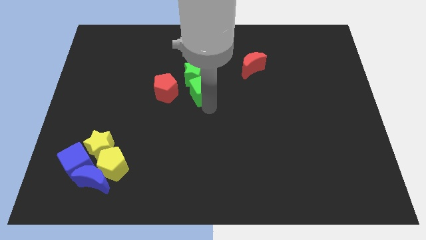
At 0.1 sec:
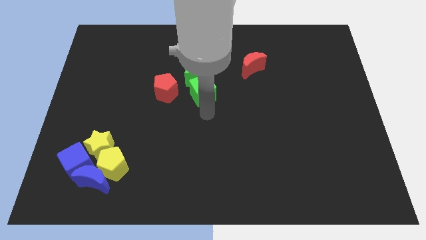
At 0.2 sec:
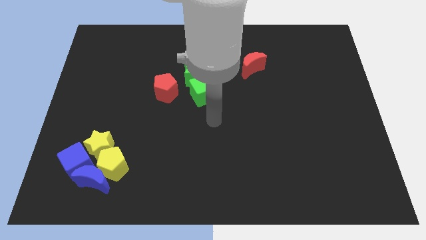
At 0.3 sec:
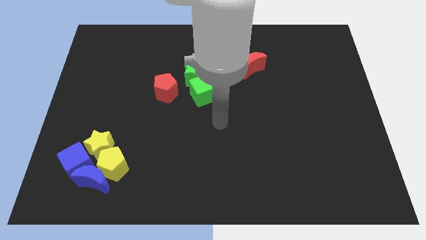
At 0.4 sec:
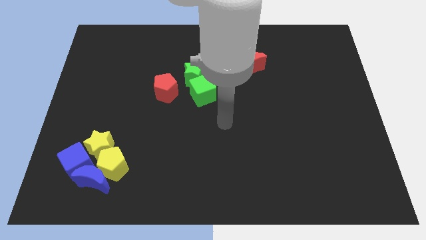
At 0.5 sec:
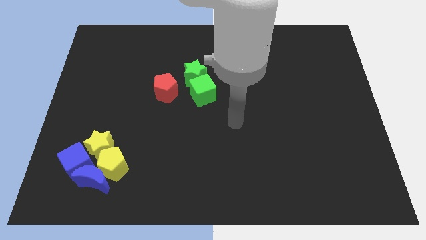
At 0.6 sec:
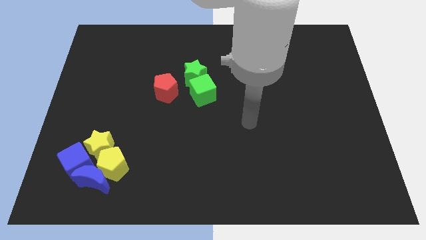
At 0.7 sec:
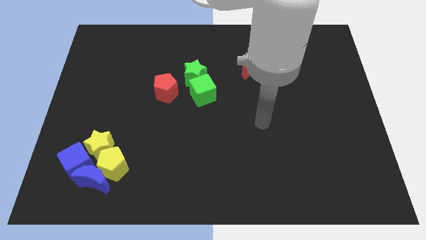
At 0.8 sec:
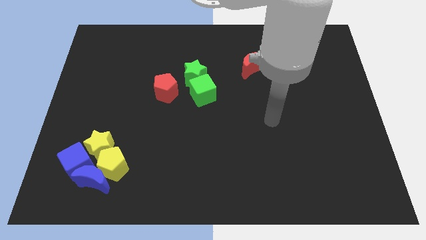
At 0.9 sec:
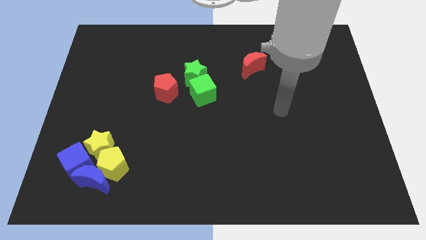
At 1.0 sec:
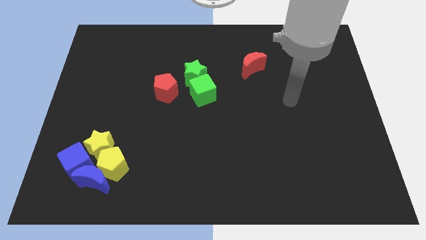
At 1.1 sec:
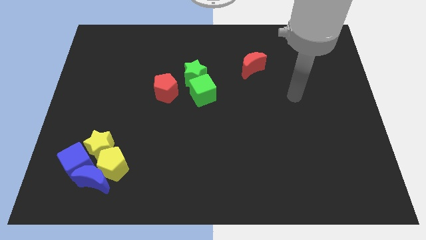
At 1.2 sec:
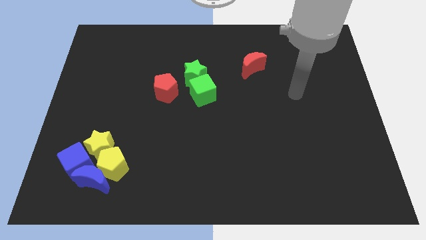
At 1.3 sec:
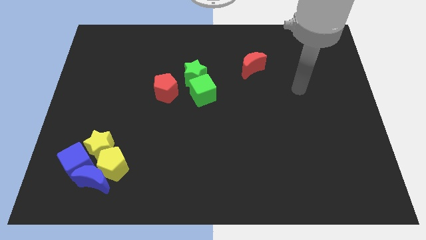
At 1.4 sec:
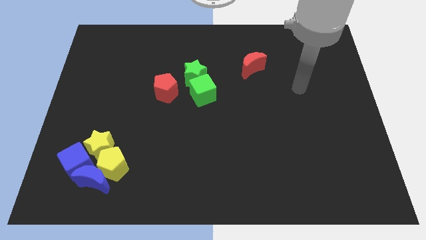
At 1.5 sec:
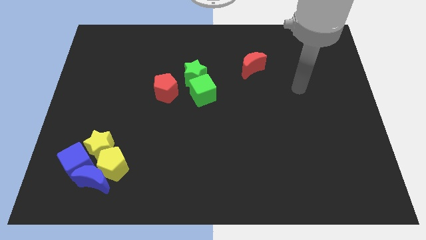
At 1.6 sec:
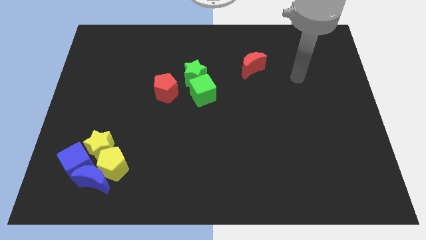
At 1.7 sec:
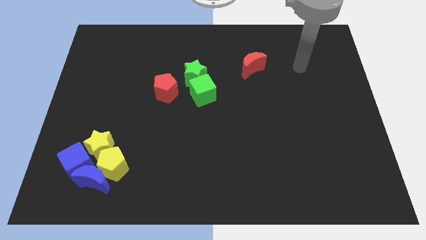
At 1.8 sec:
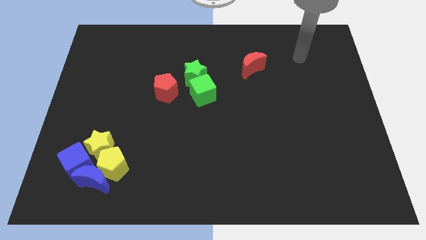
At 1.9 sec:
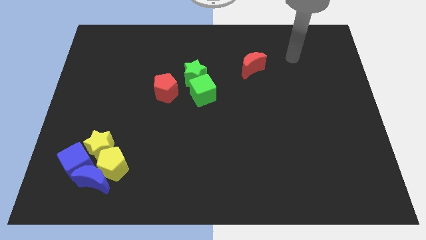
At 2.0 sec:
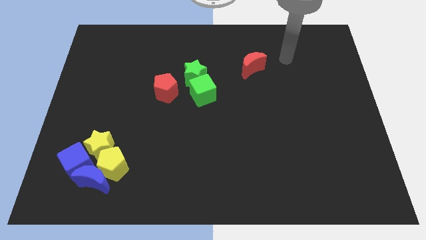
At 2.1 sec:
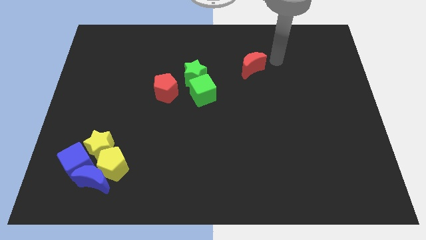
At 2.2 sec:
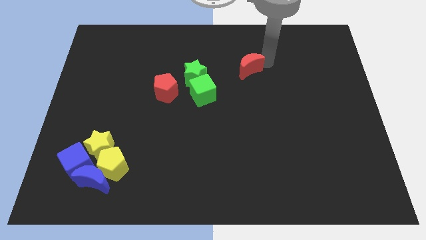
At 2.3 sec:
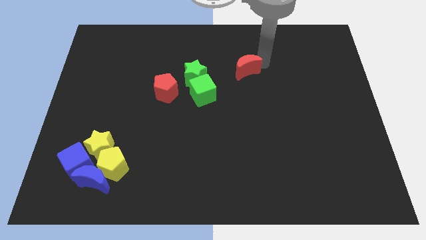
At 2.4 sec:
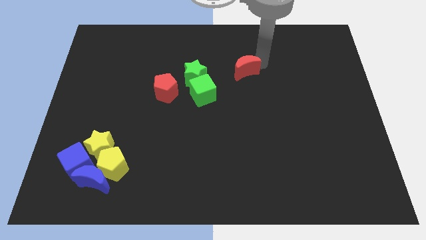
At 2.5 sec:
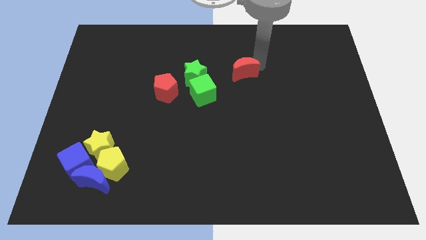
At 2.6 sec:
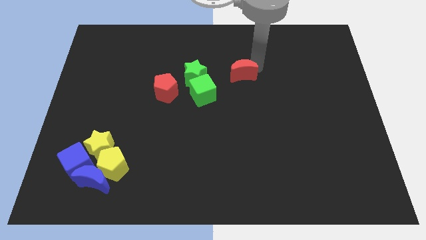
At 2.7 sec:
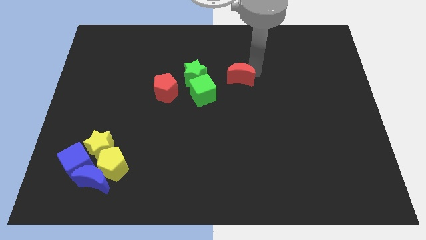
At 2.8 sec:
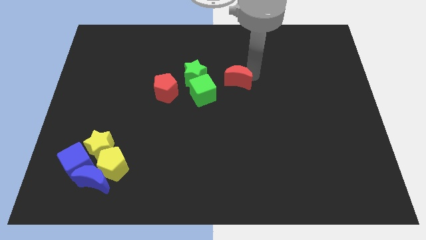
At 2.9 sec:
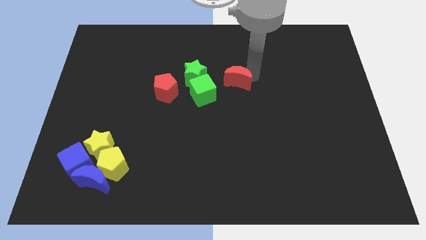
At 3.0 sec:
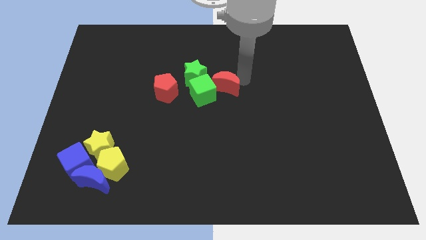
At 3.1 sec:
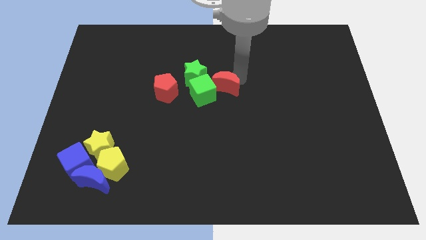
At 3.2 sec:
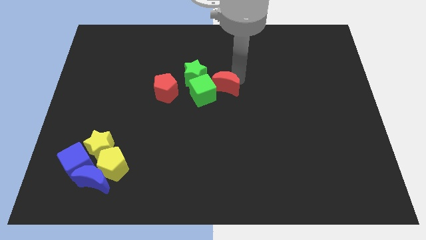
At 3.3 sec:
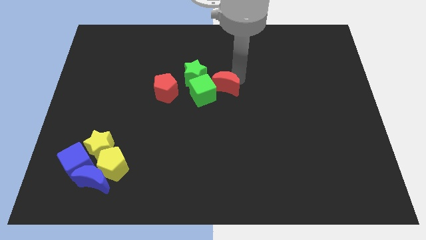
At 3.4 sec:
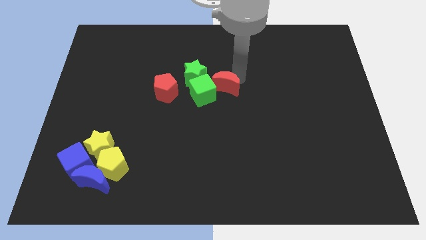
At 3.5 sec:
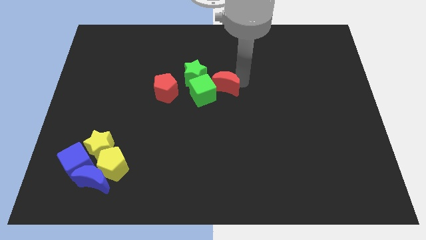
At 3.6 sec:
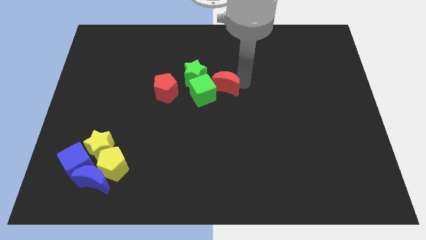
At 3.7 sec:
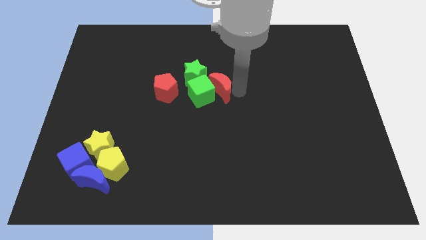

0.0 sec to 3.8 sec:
drag the red moon into the right side of the green cube

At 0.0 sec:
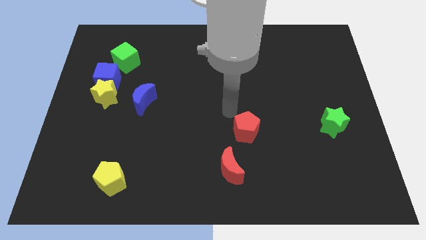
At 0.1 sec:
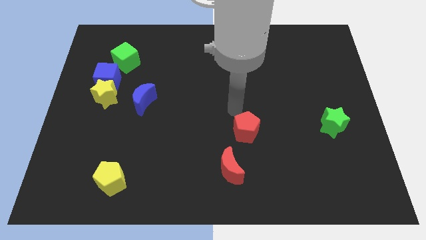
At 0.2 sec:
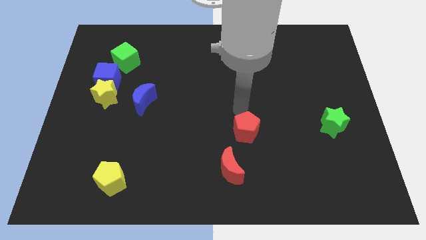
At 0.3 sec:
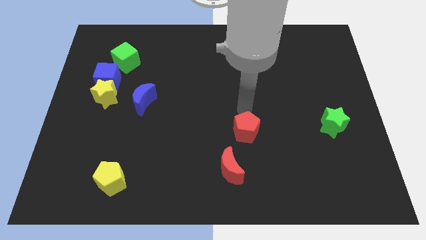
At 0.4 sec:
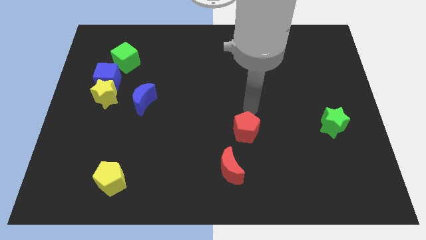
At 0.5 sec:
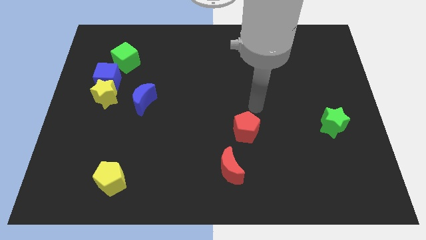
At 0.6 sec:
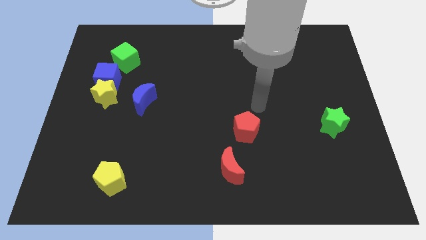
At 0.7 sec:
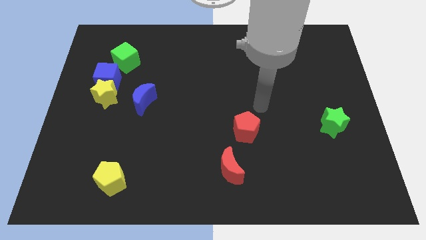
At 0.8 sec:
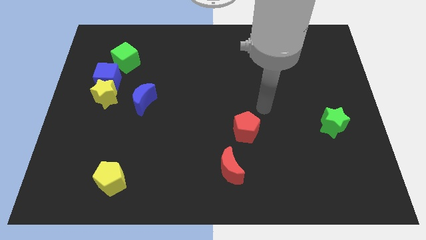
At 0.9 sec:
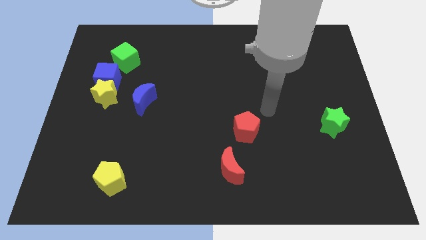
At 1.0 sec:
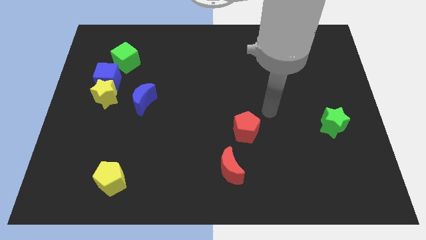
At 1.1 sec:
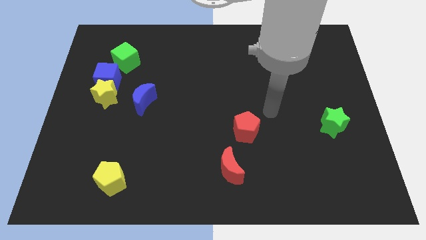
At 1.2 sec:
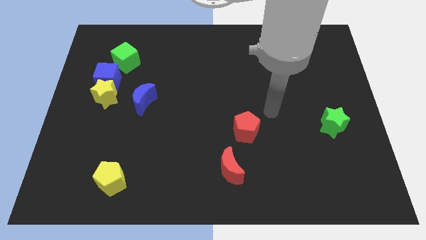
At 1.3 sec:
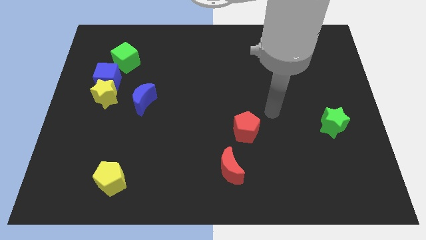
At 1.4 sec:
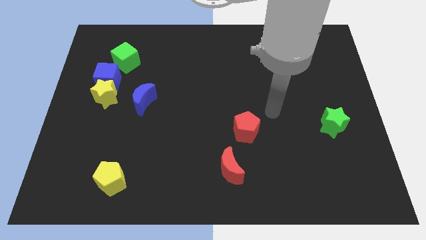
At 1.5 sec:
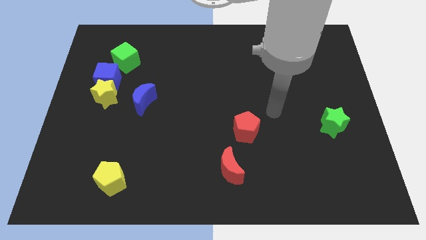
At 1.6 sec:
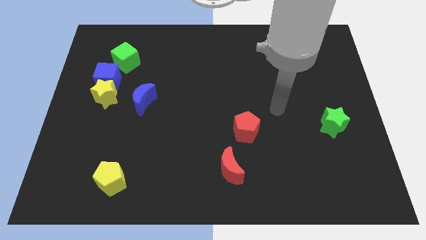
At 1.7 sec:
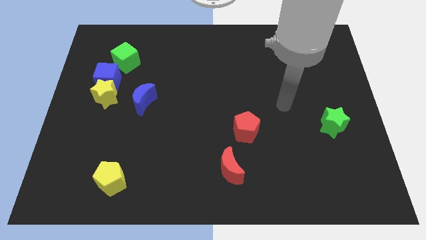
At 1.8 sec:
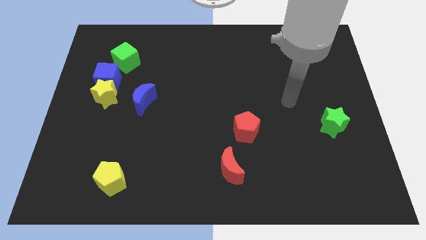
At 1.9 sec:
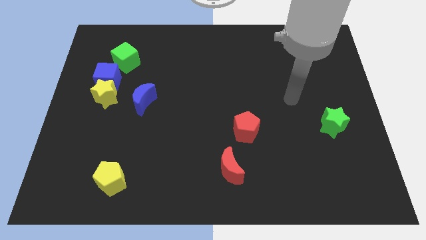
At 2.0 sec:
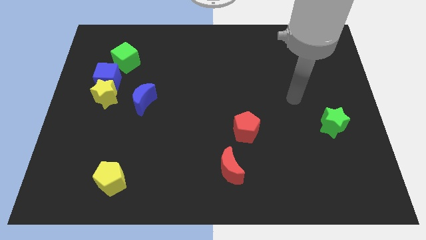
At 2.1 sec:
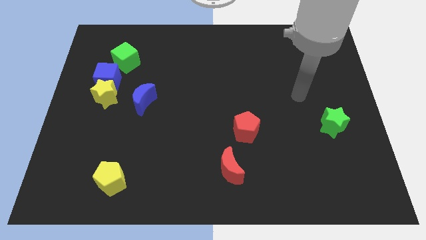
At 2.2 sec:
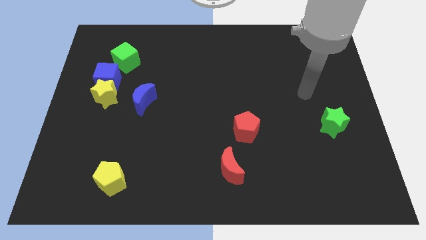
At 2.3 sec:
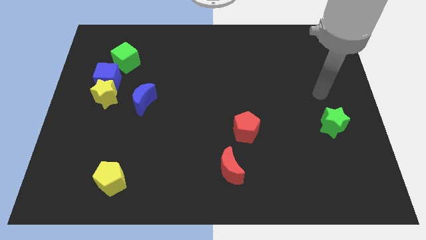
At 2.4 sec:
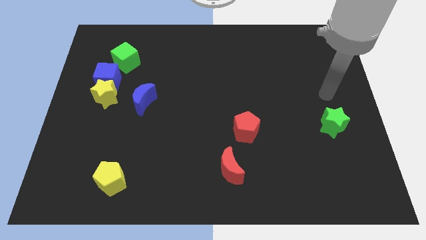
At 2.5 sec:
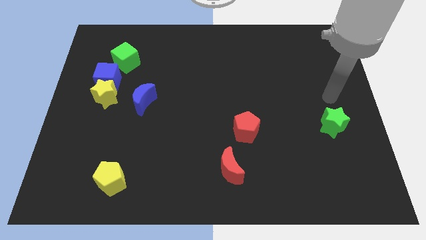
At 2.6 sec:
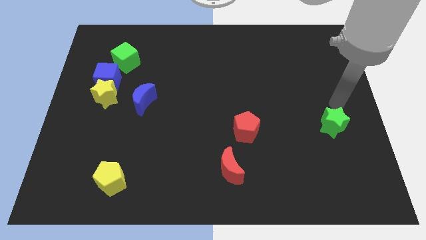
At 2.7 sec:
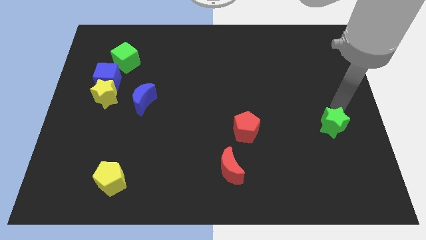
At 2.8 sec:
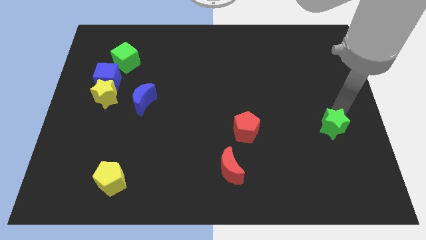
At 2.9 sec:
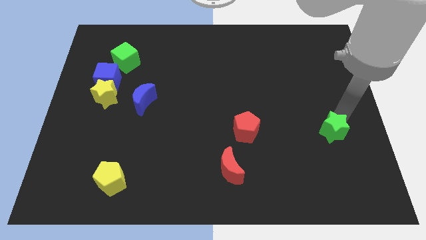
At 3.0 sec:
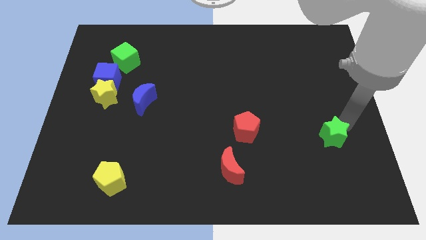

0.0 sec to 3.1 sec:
touch the top of the green star

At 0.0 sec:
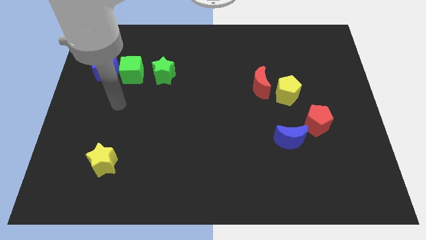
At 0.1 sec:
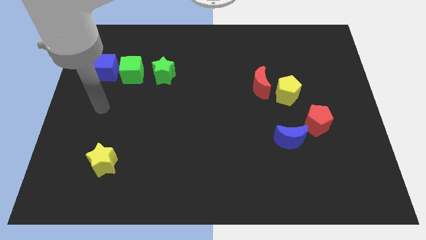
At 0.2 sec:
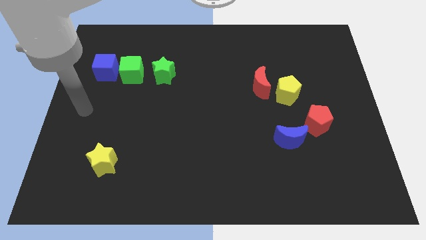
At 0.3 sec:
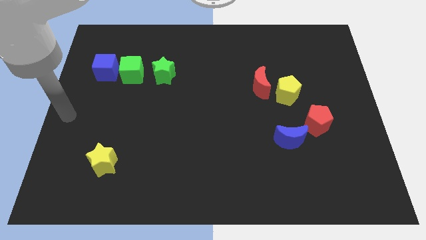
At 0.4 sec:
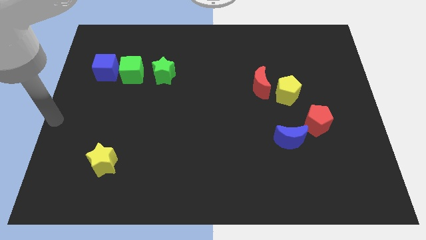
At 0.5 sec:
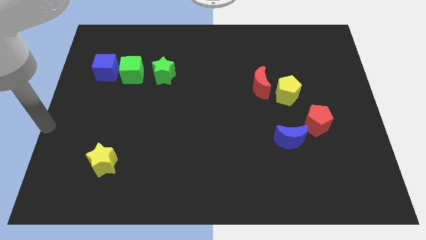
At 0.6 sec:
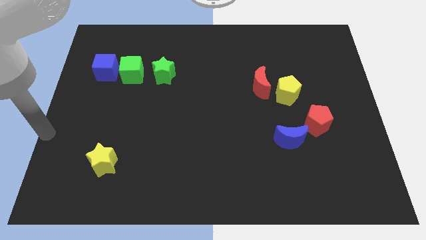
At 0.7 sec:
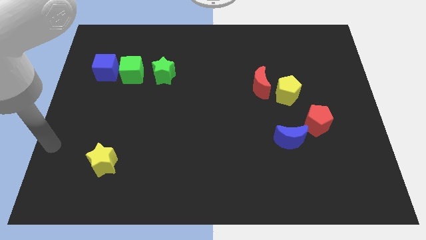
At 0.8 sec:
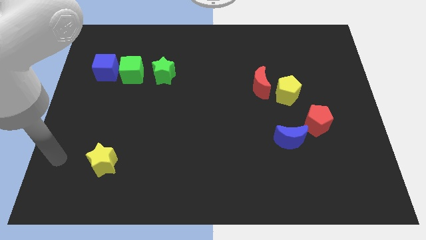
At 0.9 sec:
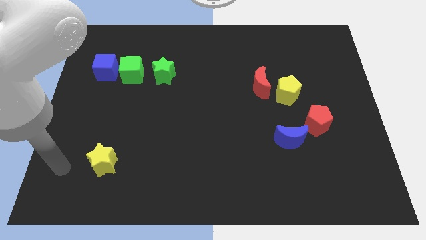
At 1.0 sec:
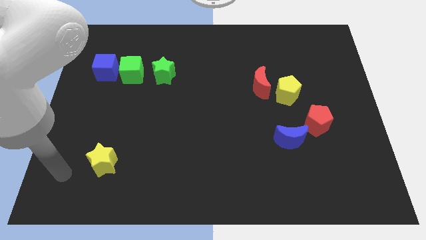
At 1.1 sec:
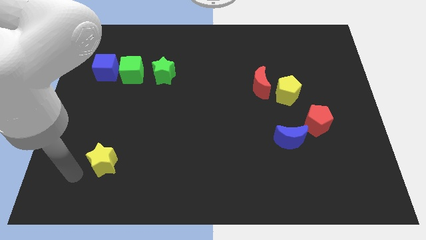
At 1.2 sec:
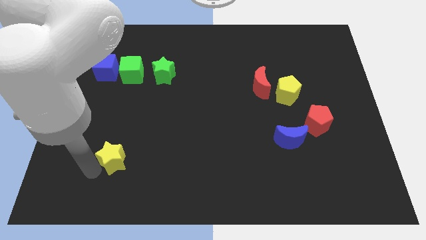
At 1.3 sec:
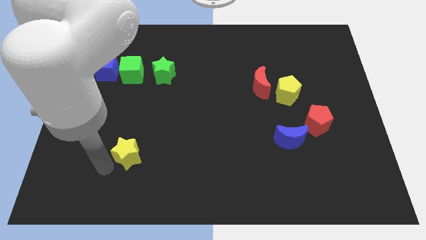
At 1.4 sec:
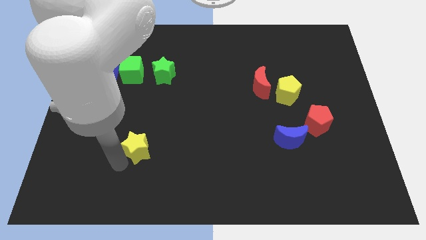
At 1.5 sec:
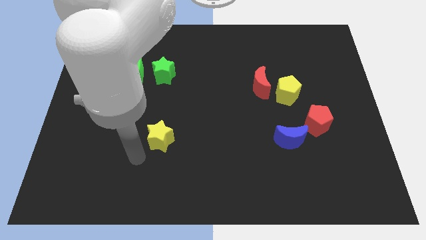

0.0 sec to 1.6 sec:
push the yellow star vertically below the green star

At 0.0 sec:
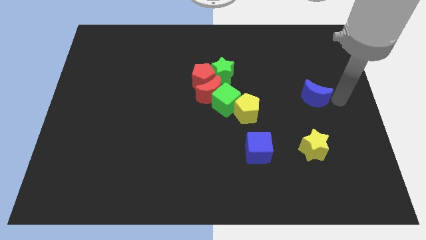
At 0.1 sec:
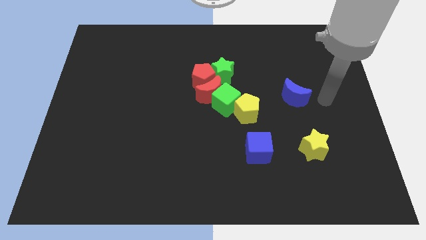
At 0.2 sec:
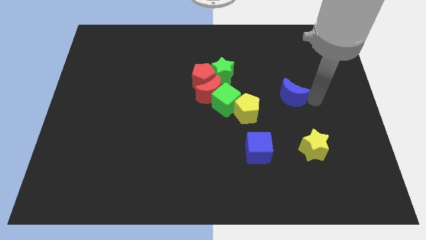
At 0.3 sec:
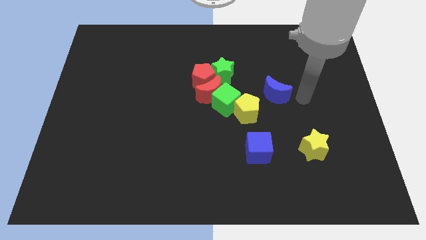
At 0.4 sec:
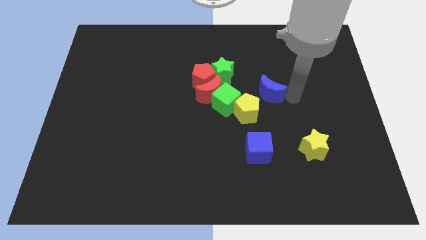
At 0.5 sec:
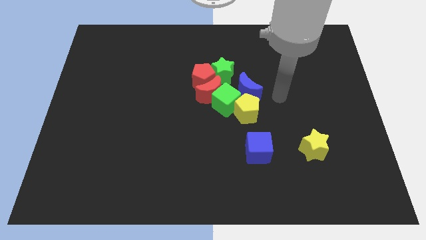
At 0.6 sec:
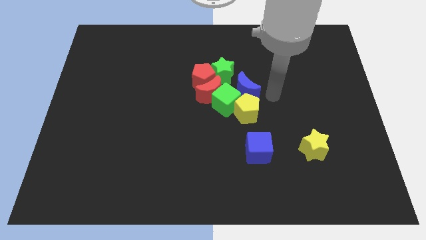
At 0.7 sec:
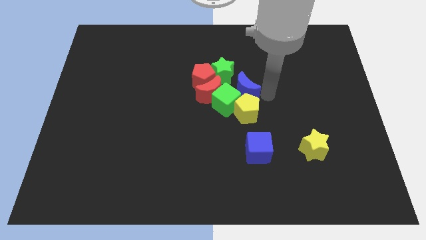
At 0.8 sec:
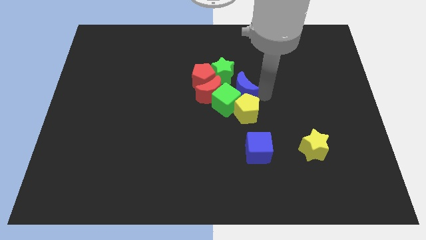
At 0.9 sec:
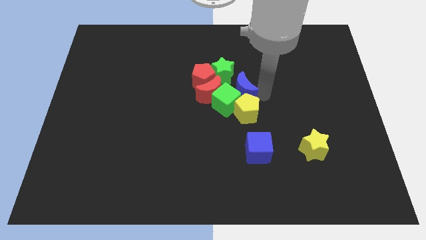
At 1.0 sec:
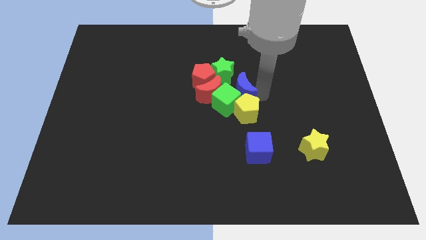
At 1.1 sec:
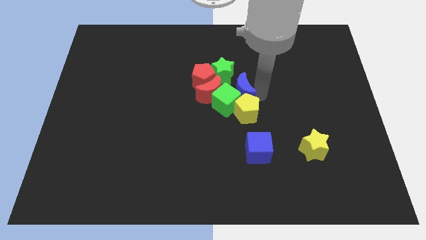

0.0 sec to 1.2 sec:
push the blue crescent towards the group of blocks
